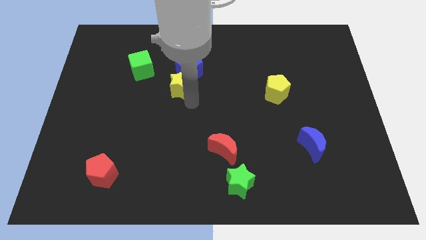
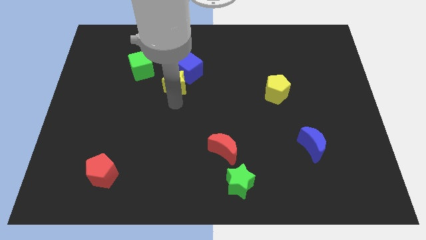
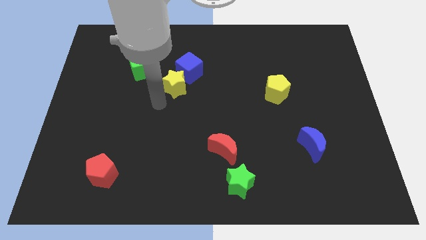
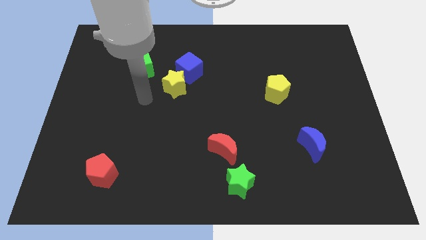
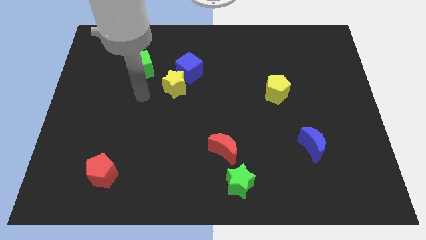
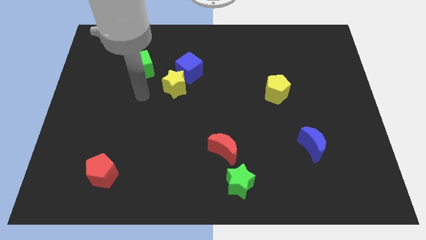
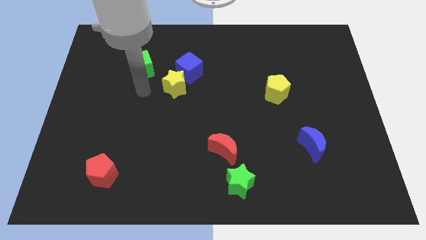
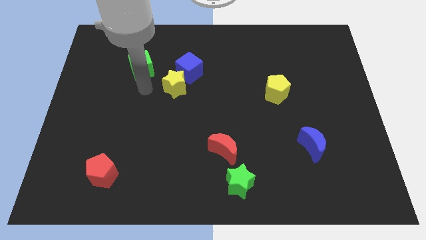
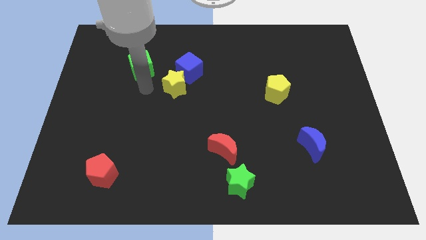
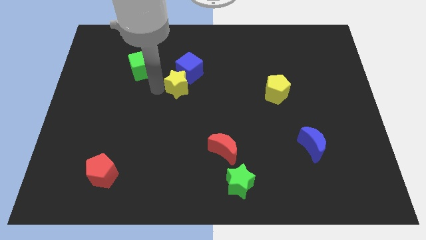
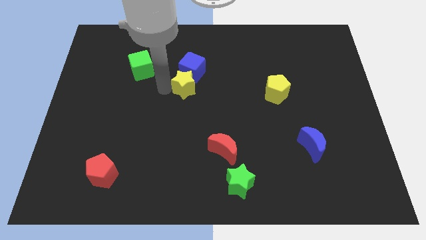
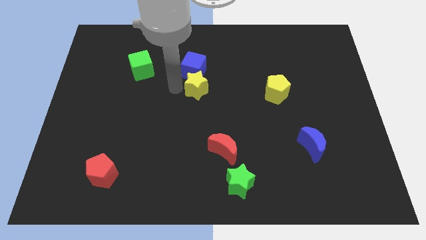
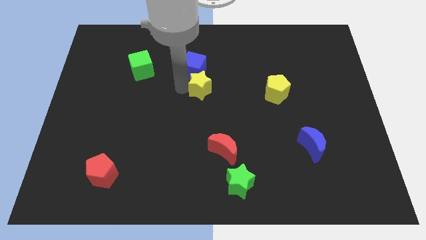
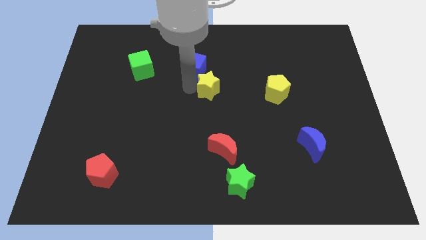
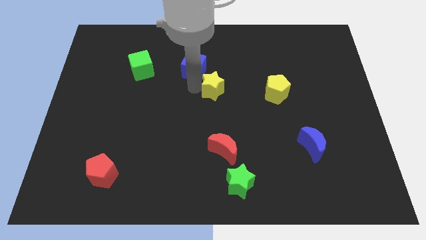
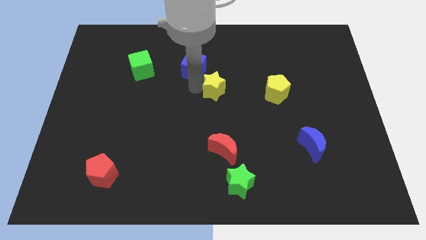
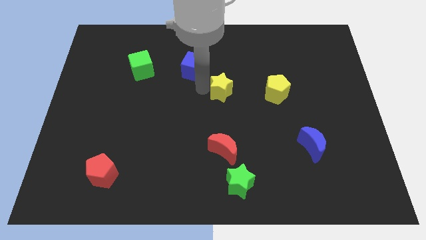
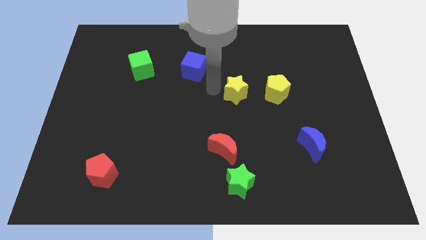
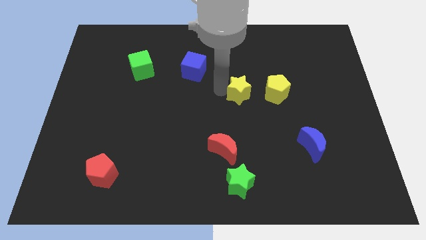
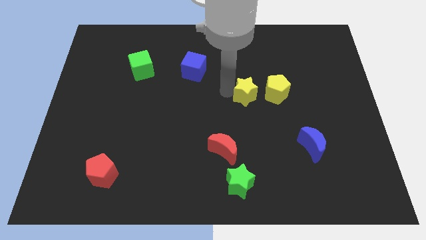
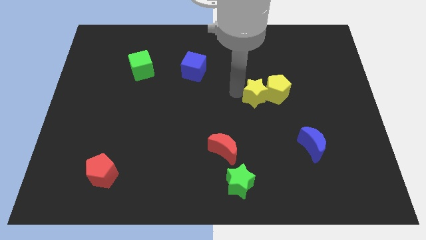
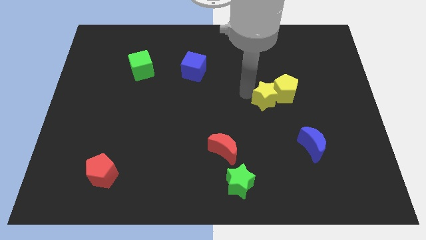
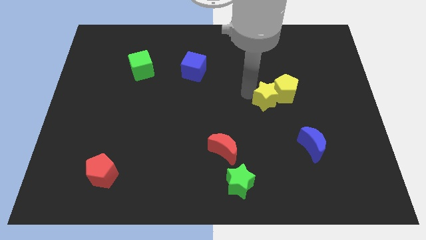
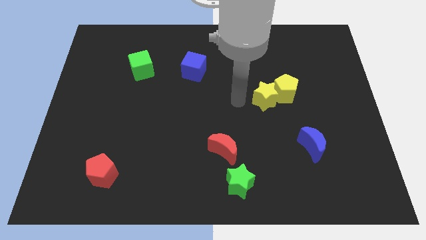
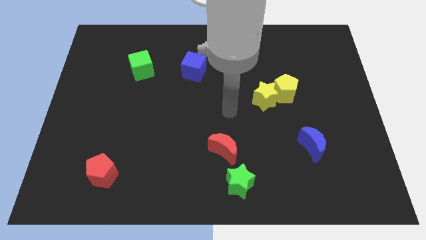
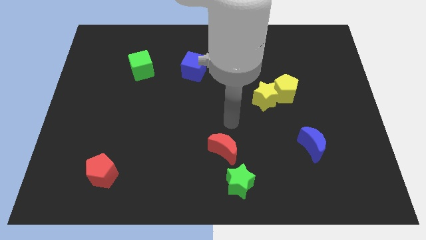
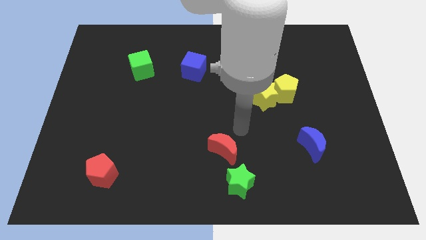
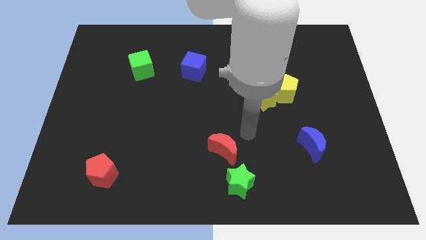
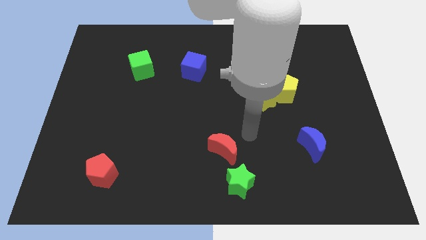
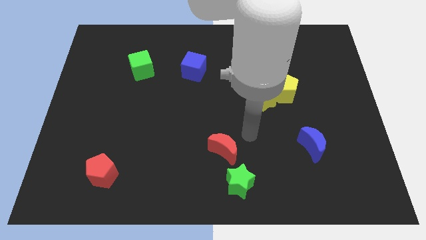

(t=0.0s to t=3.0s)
push the yellow star into the yellow pentagon

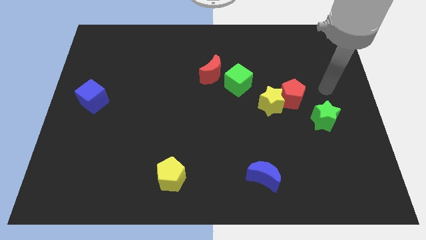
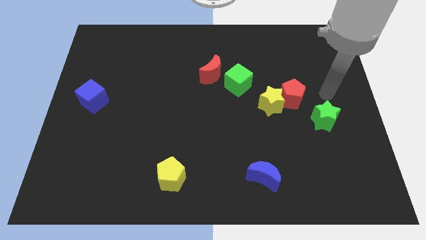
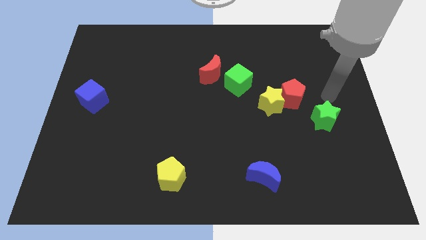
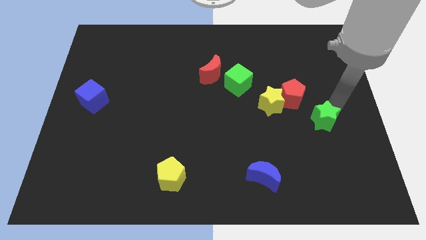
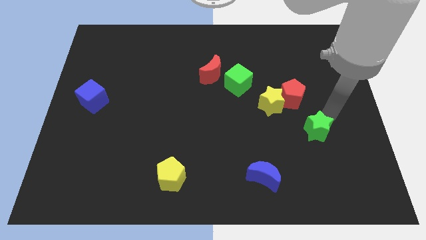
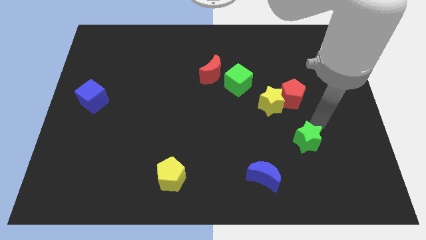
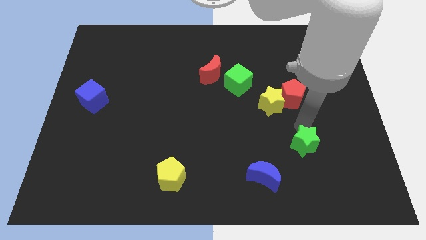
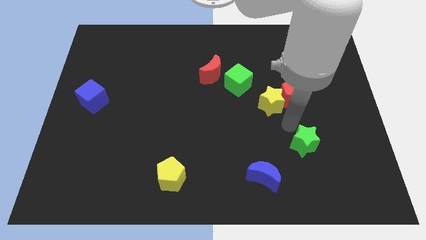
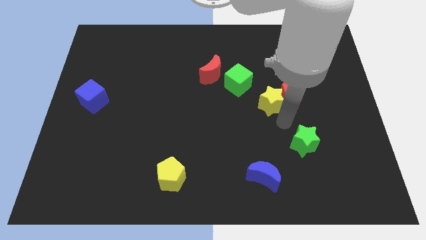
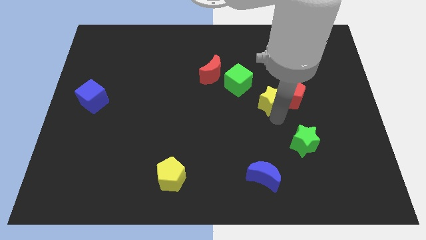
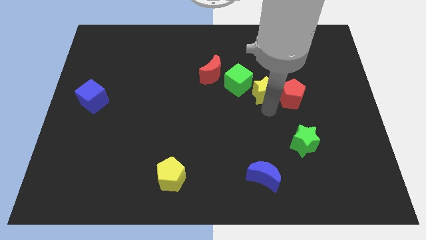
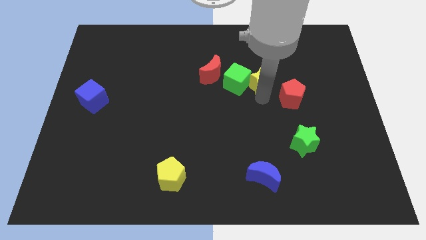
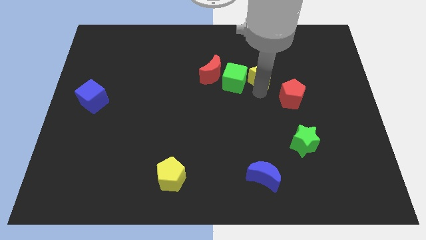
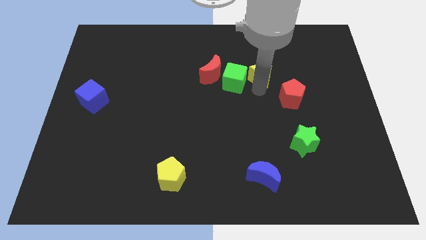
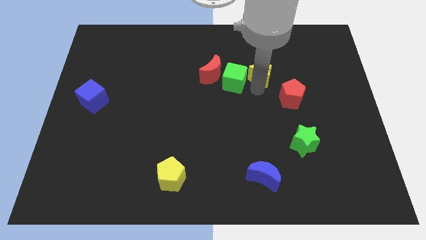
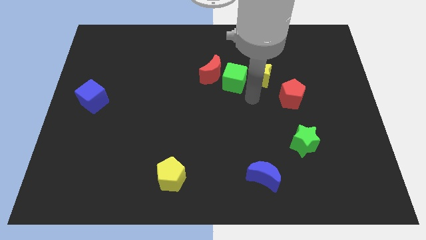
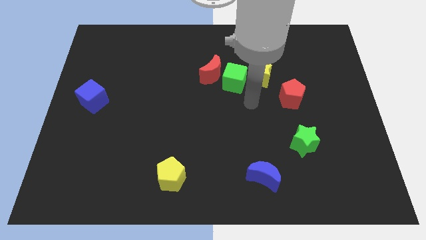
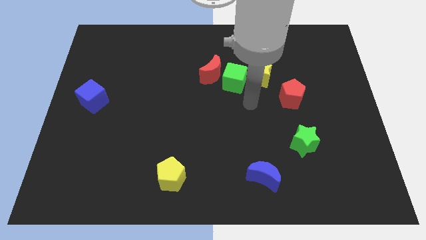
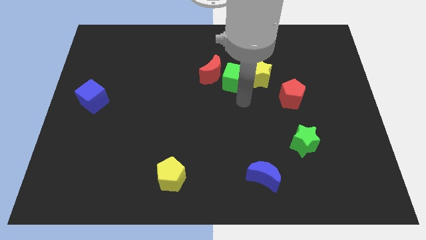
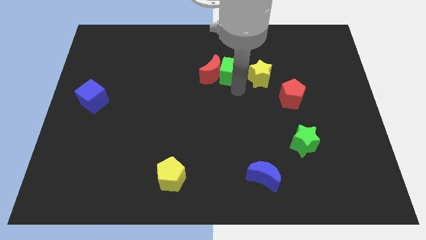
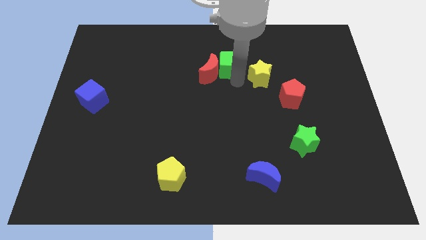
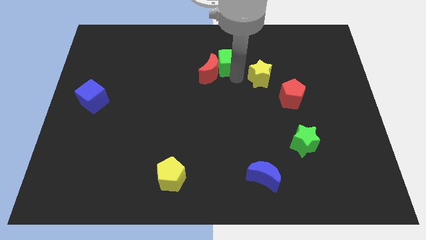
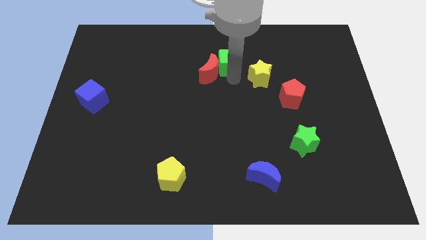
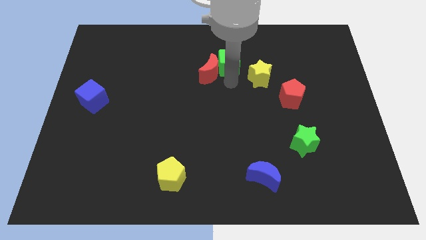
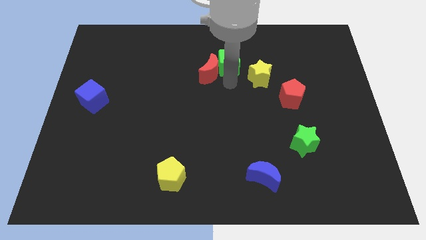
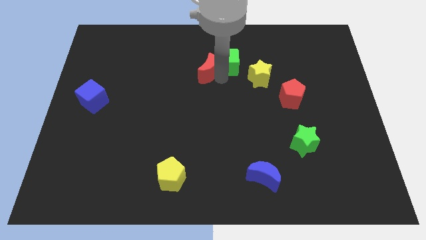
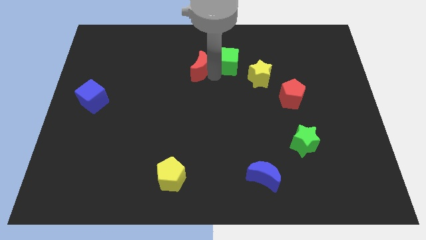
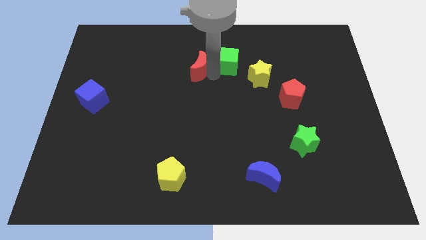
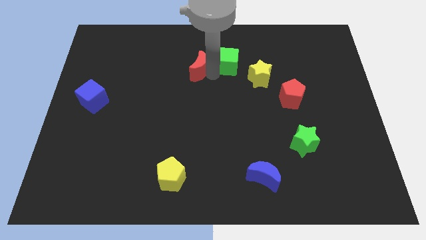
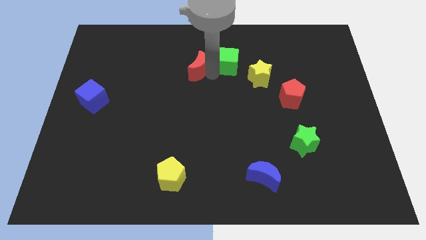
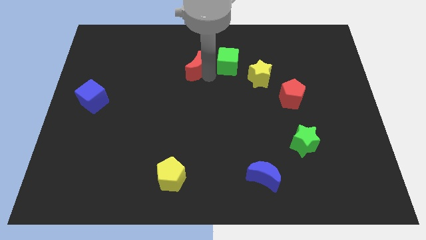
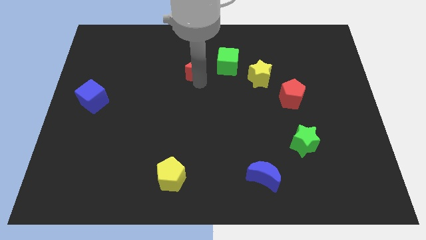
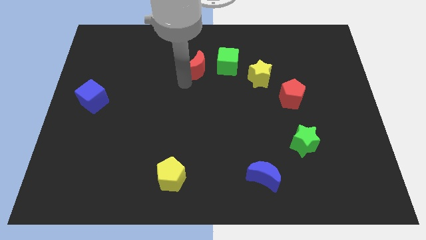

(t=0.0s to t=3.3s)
push red crescent slightly towards left

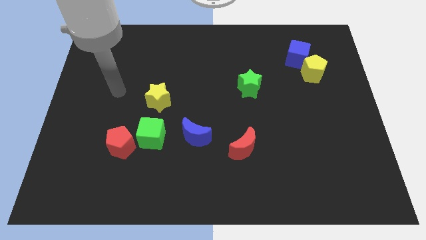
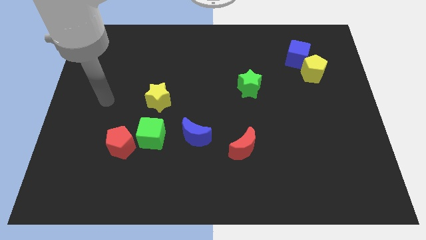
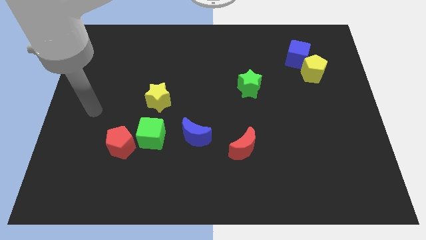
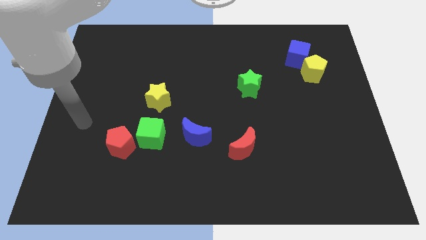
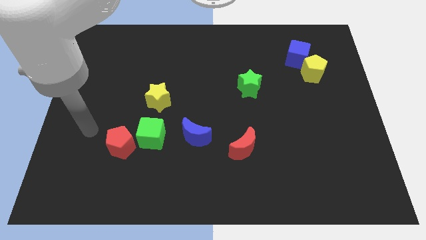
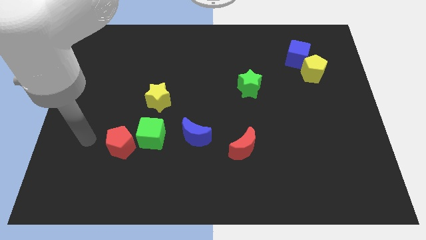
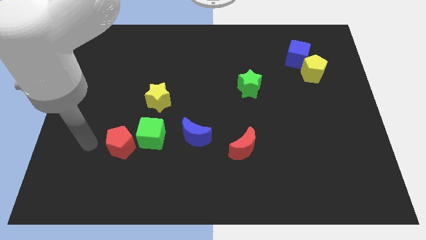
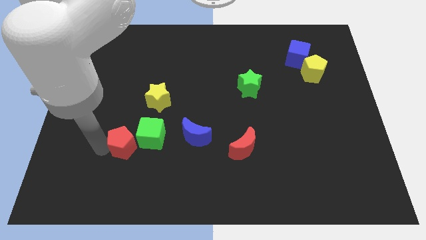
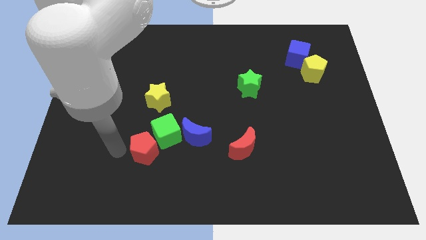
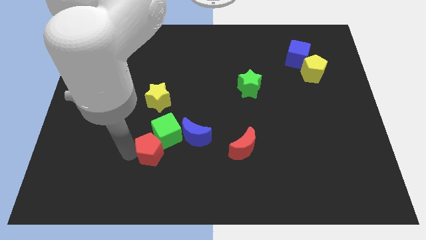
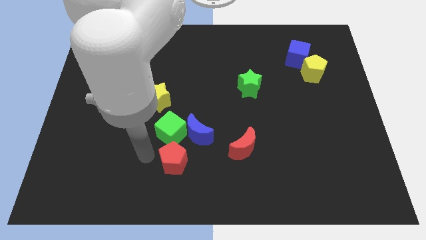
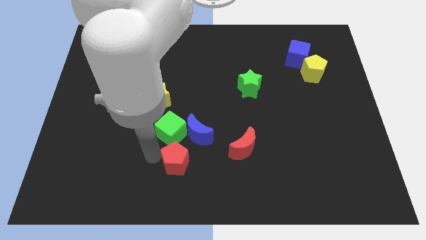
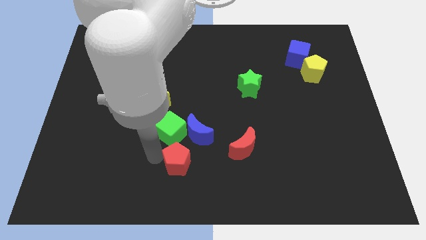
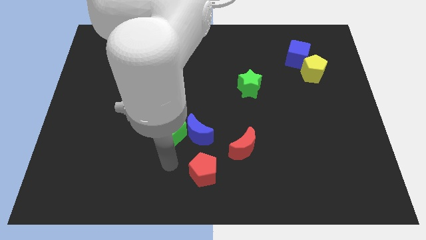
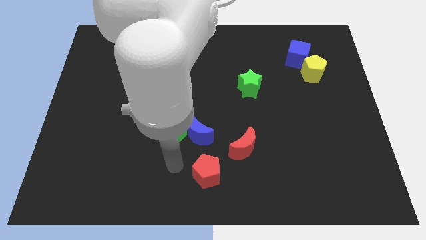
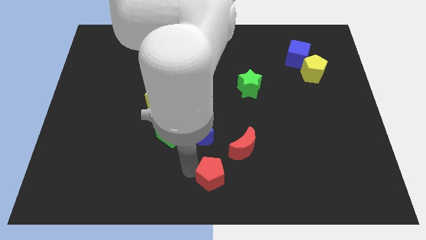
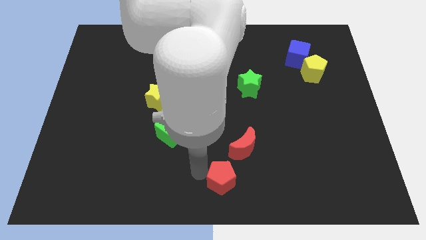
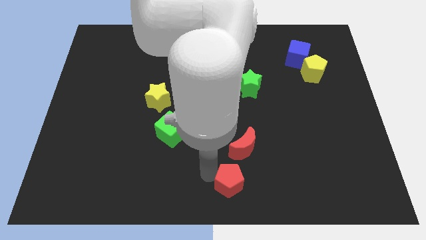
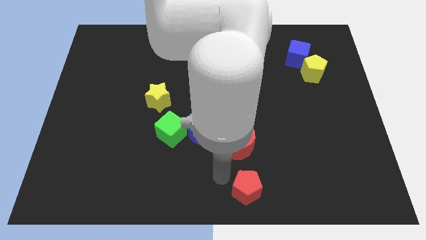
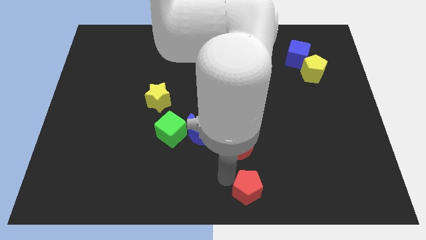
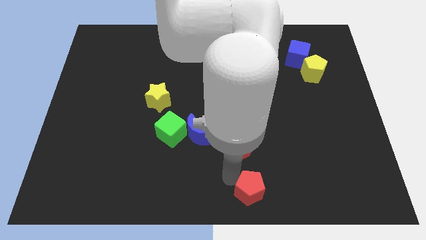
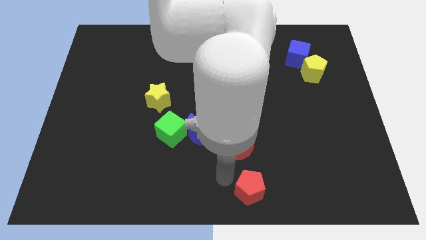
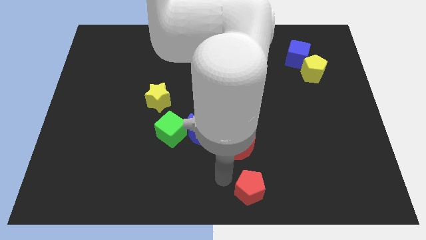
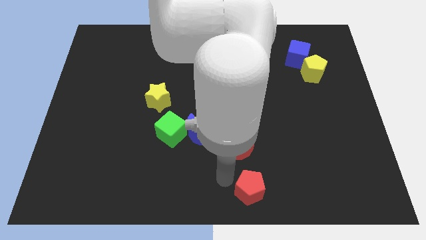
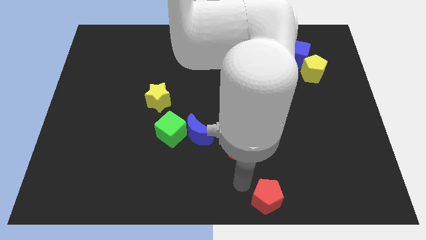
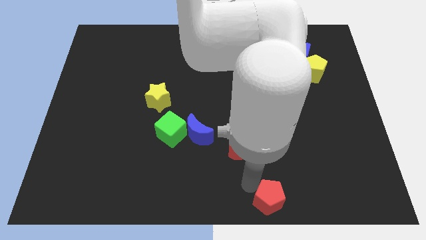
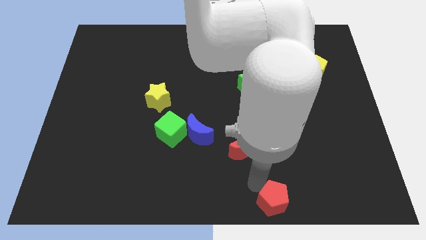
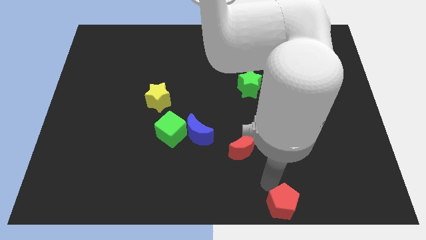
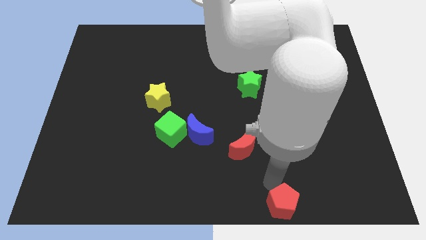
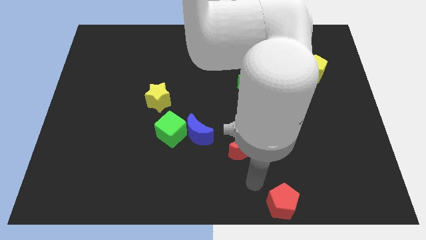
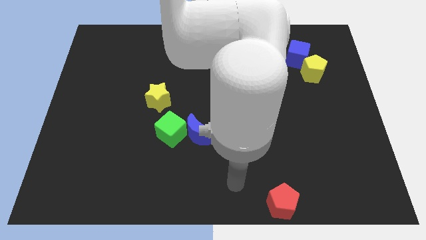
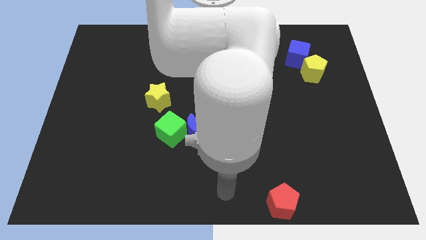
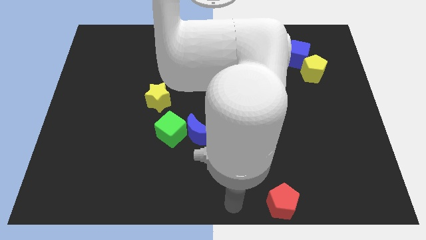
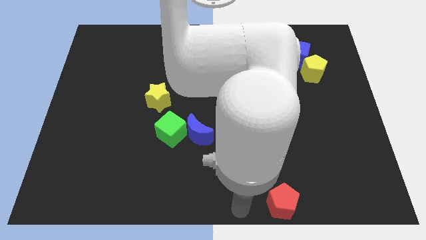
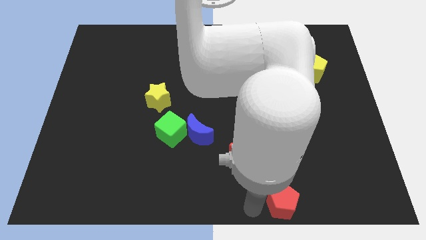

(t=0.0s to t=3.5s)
separate the red pentagon from green cube
